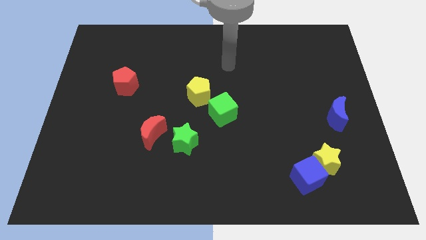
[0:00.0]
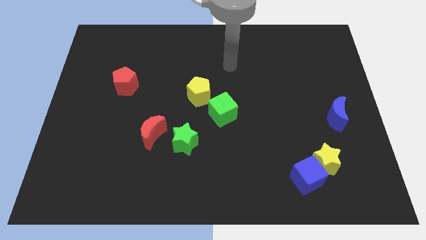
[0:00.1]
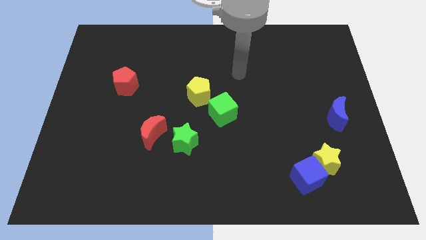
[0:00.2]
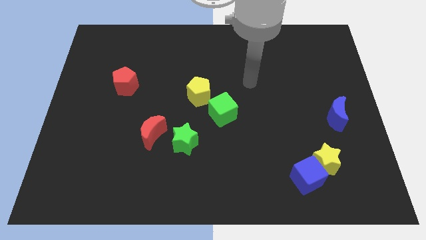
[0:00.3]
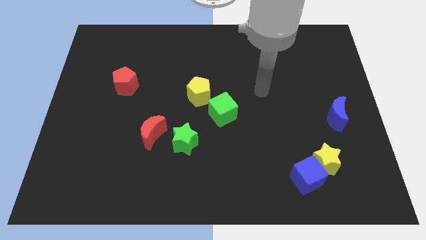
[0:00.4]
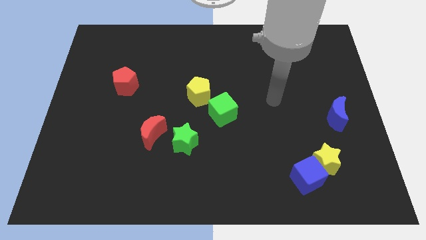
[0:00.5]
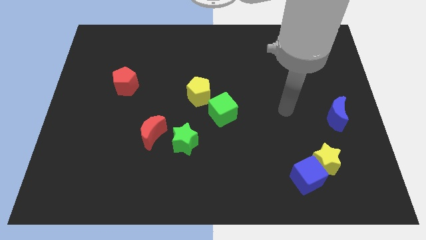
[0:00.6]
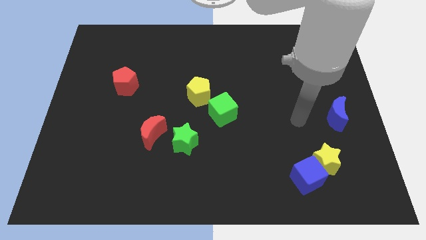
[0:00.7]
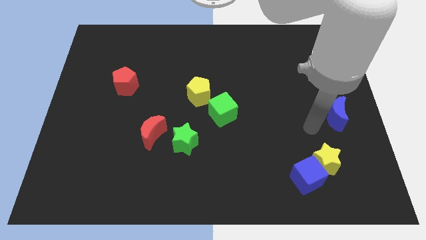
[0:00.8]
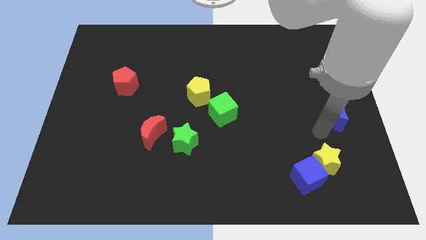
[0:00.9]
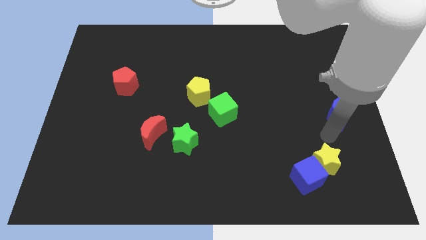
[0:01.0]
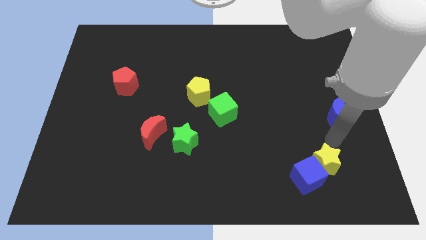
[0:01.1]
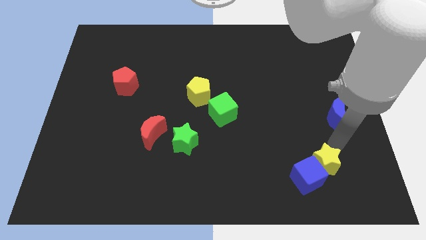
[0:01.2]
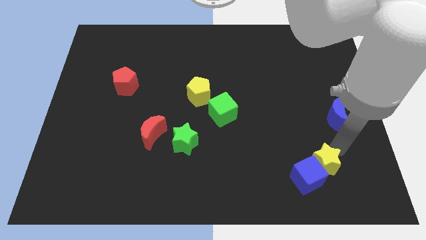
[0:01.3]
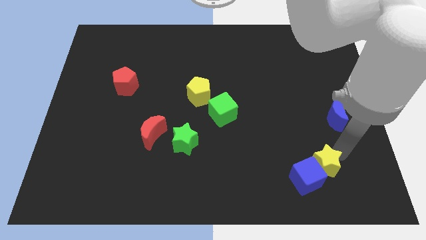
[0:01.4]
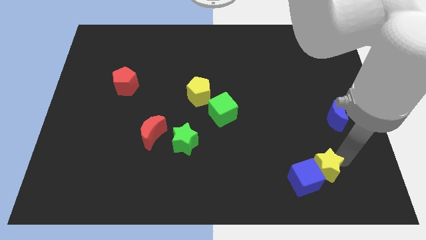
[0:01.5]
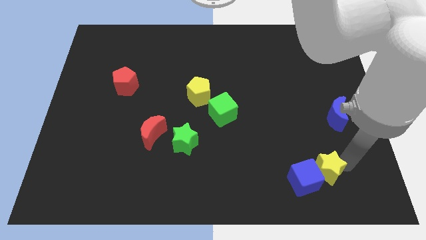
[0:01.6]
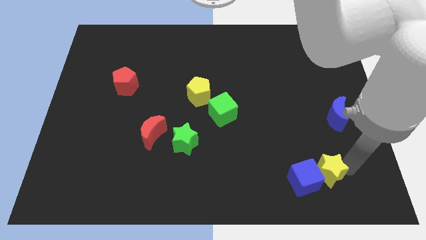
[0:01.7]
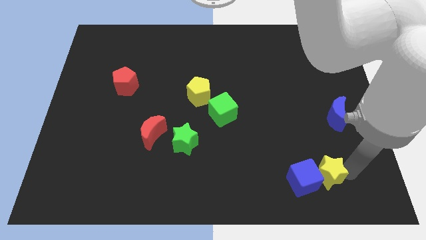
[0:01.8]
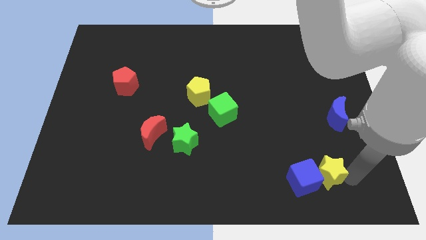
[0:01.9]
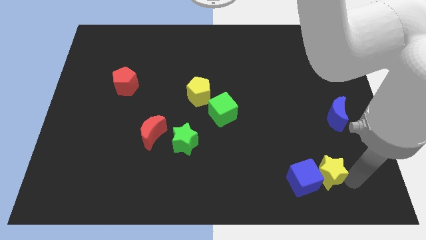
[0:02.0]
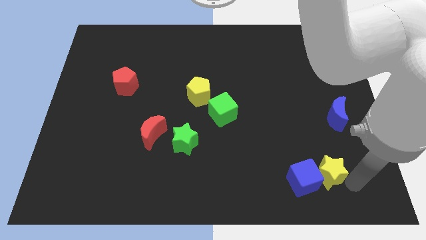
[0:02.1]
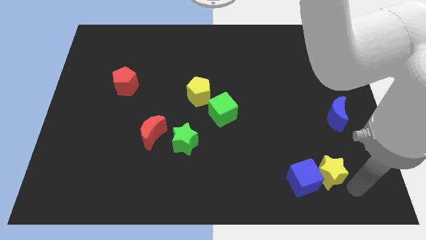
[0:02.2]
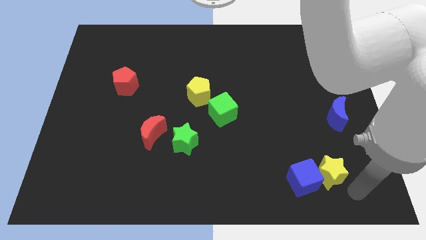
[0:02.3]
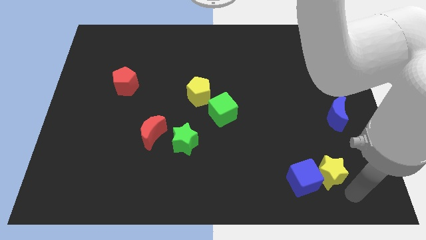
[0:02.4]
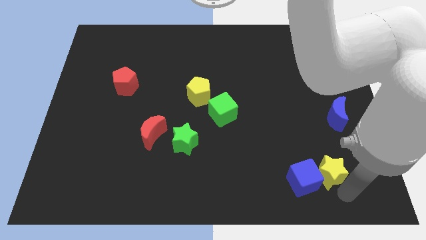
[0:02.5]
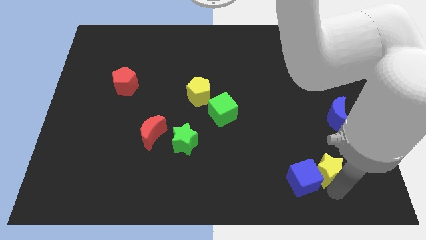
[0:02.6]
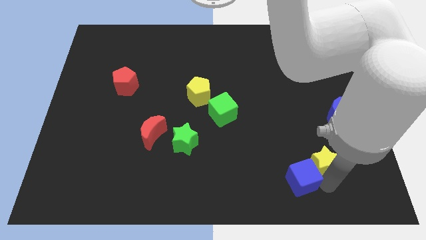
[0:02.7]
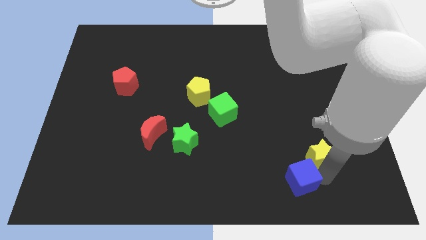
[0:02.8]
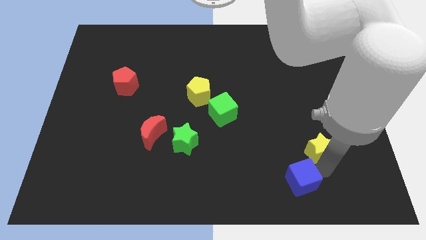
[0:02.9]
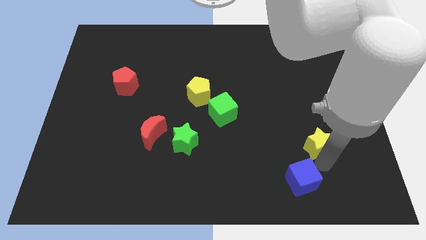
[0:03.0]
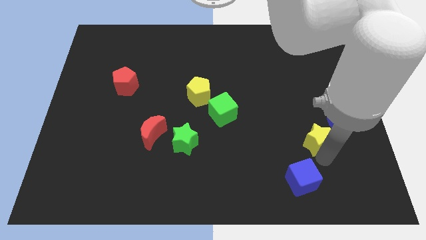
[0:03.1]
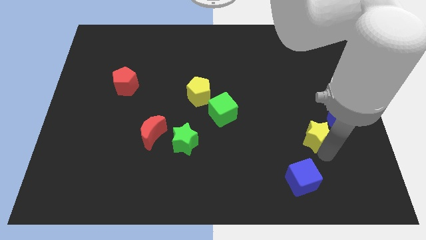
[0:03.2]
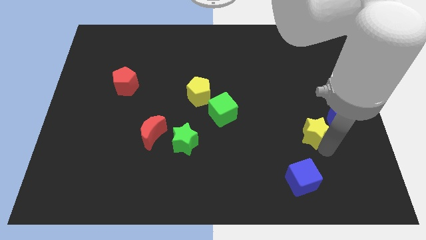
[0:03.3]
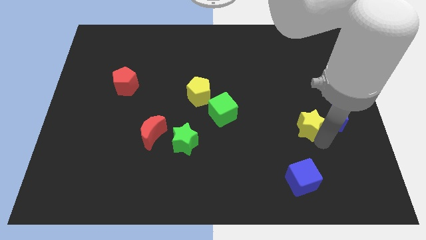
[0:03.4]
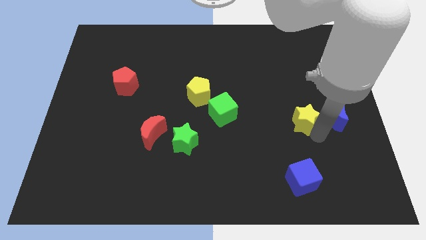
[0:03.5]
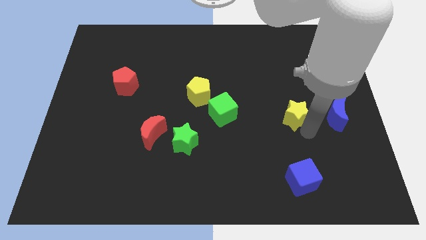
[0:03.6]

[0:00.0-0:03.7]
place the yellow star in between the green cube and the blue moon

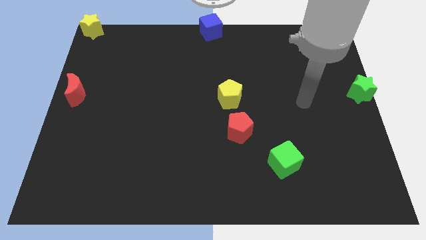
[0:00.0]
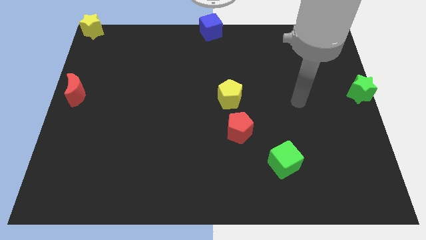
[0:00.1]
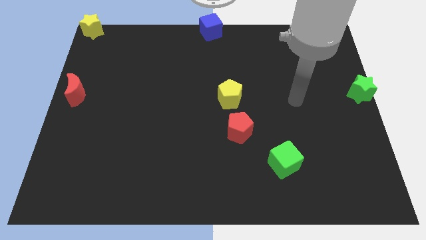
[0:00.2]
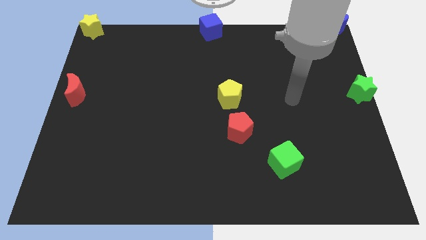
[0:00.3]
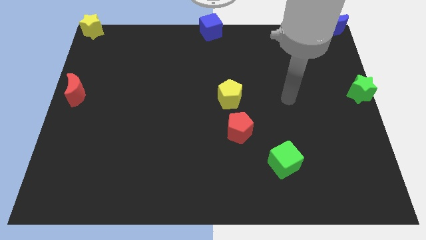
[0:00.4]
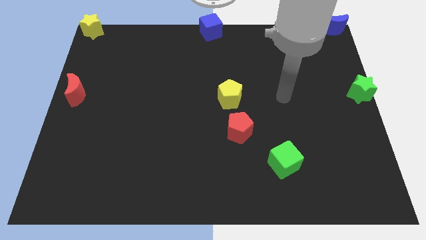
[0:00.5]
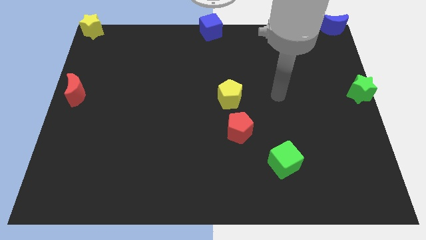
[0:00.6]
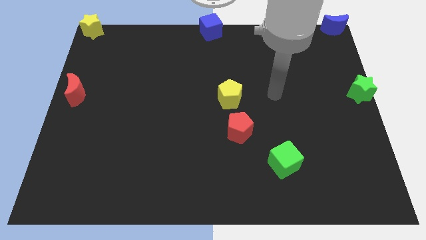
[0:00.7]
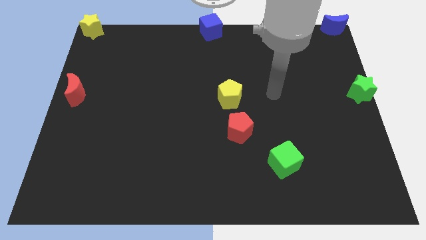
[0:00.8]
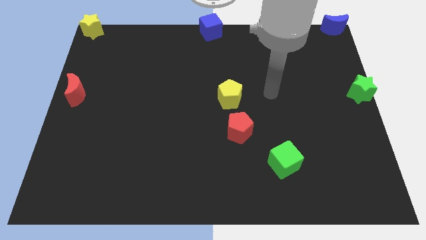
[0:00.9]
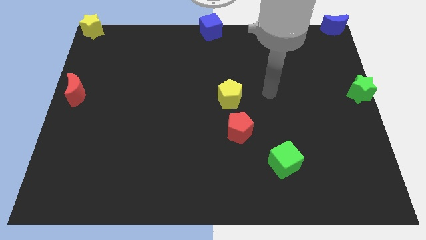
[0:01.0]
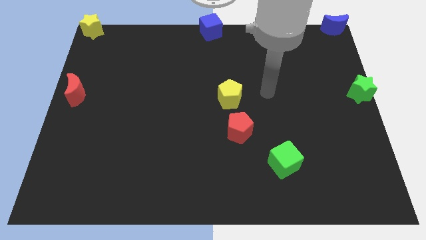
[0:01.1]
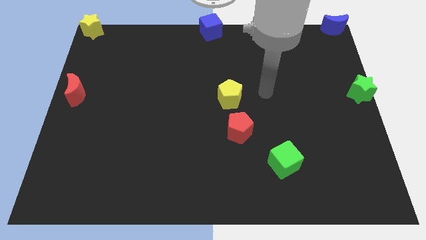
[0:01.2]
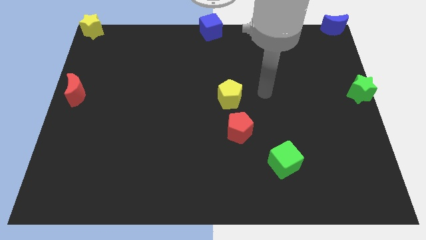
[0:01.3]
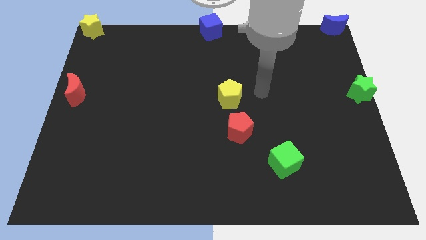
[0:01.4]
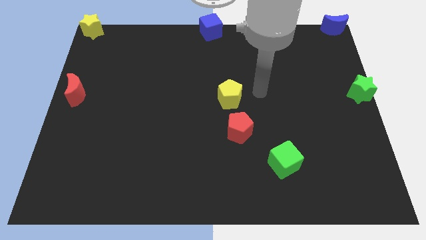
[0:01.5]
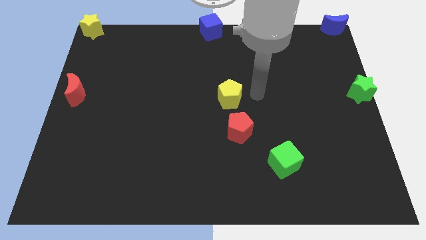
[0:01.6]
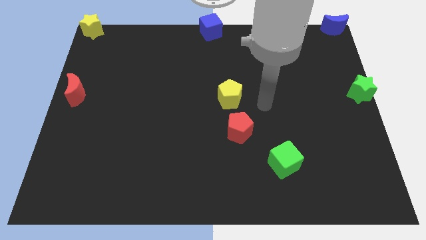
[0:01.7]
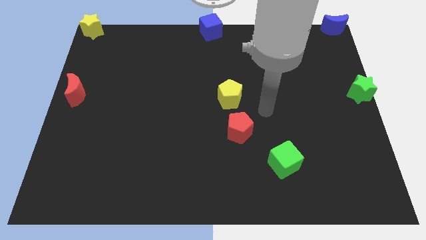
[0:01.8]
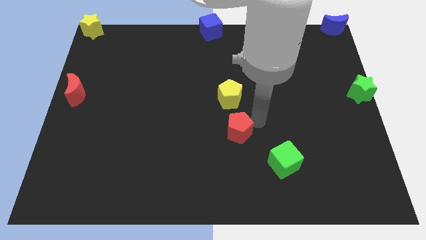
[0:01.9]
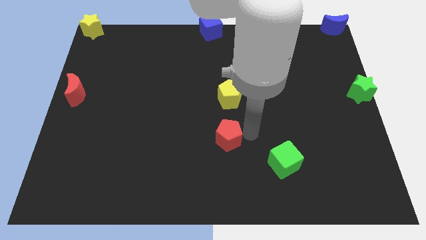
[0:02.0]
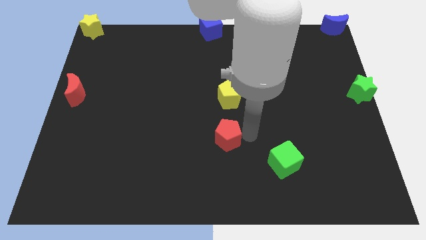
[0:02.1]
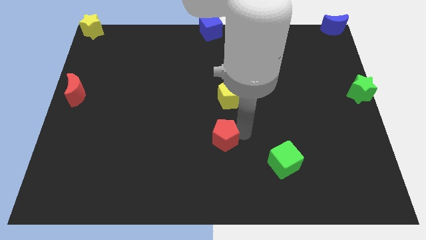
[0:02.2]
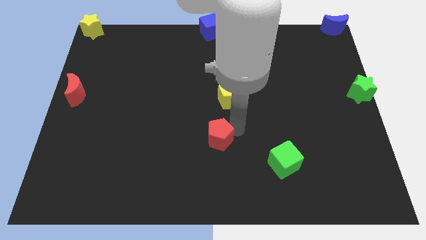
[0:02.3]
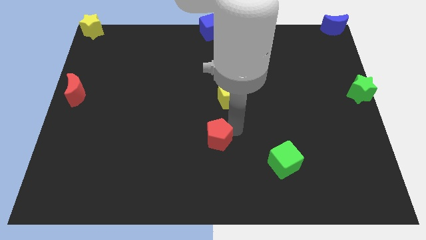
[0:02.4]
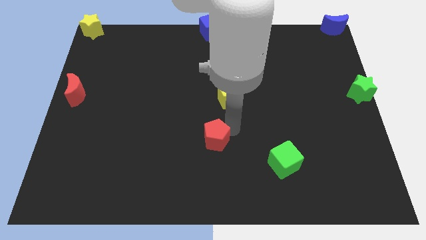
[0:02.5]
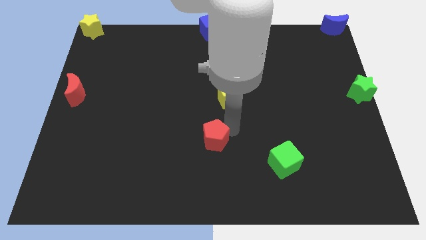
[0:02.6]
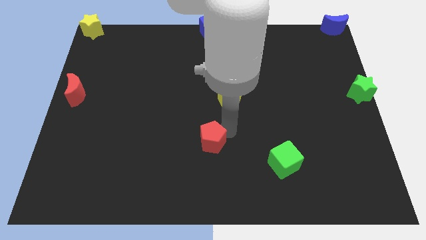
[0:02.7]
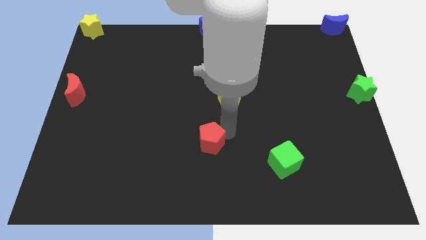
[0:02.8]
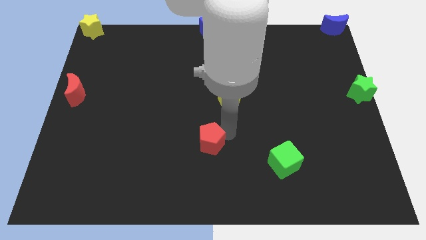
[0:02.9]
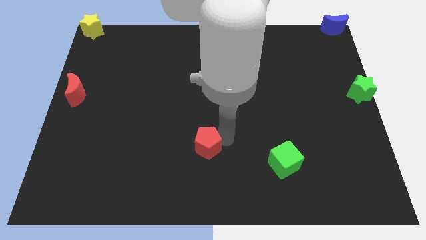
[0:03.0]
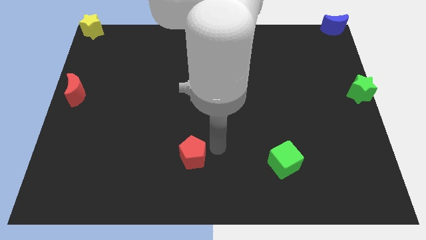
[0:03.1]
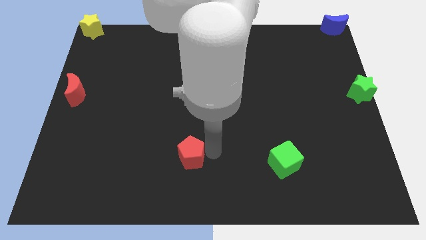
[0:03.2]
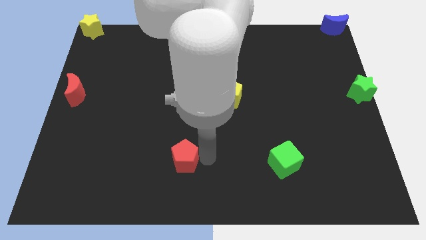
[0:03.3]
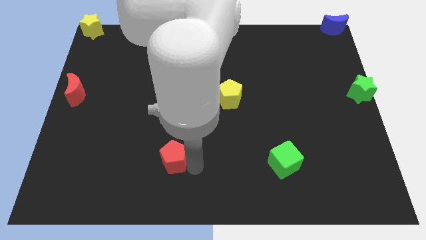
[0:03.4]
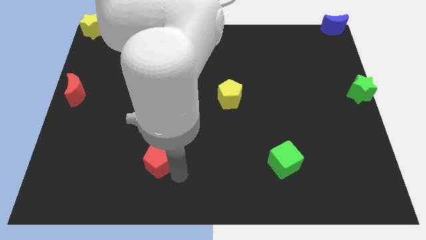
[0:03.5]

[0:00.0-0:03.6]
drag the red pentagon horizontally to the left side of the green cube

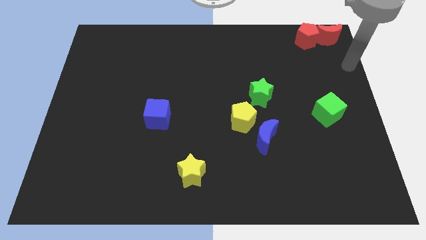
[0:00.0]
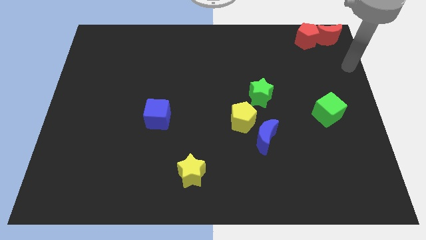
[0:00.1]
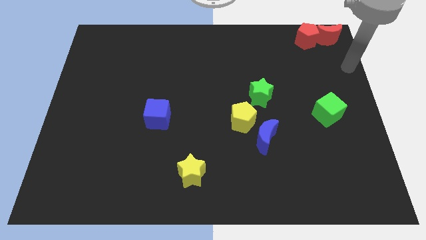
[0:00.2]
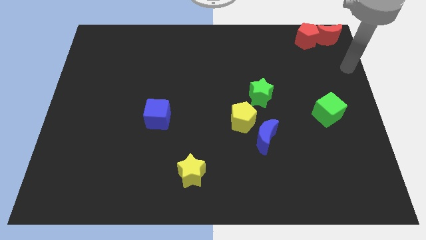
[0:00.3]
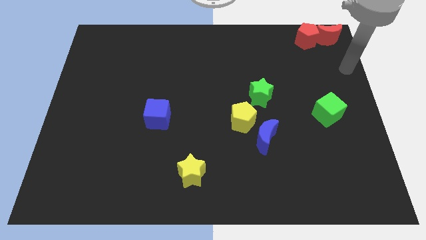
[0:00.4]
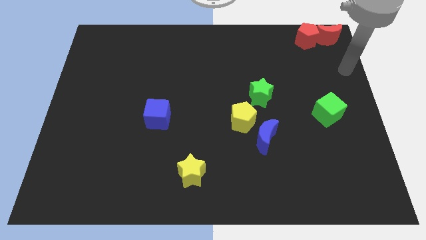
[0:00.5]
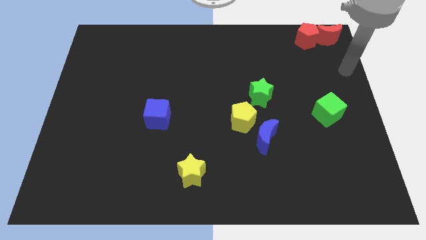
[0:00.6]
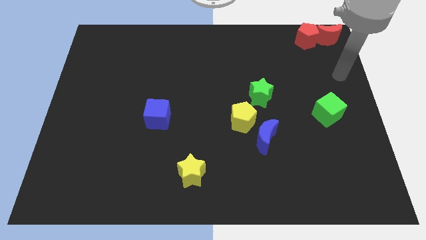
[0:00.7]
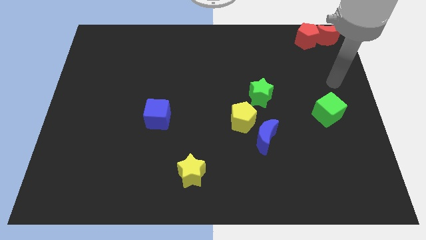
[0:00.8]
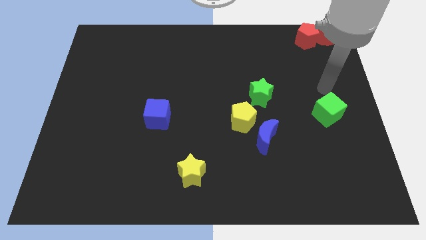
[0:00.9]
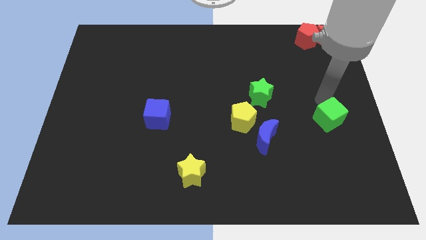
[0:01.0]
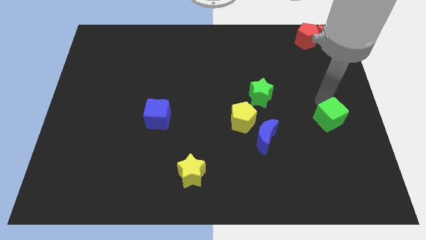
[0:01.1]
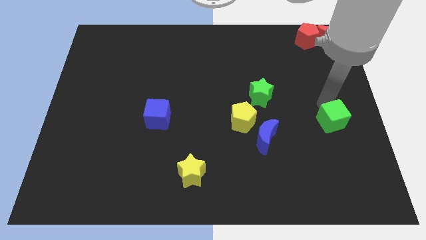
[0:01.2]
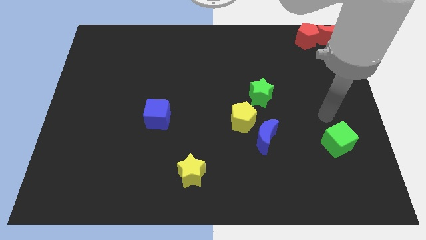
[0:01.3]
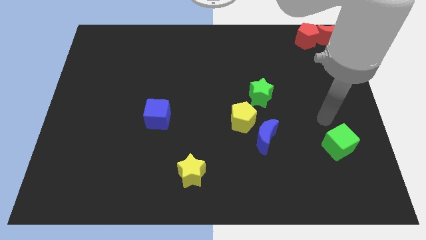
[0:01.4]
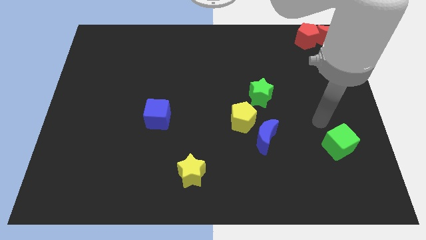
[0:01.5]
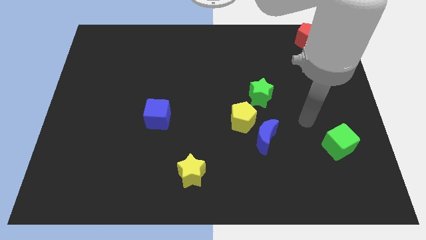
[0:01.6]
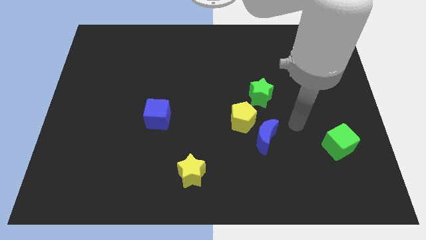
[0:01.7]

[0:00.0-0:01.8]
slightly push the green cube downwards
